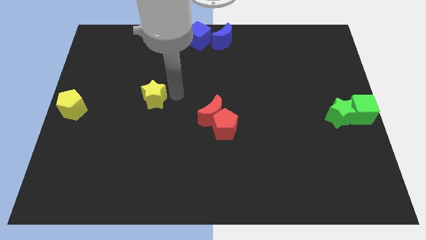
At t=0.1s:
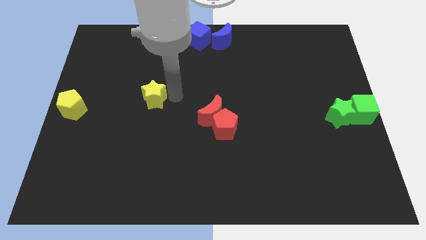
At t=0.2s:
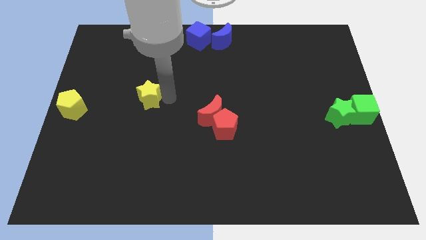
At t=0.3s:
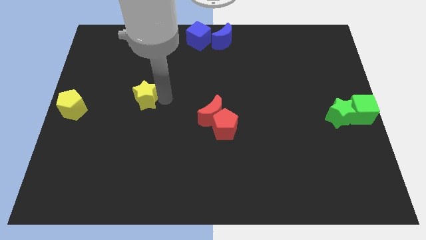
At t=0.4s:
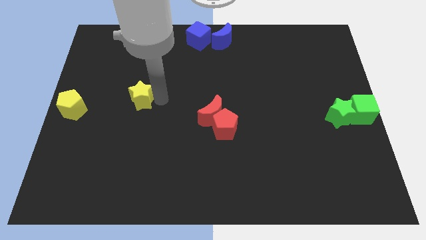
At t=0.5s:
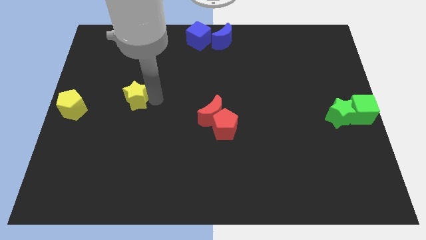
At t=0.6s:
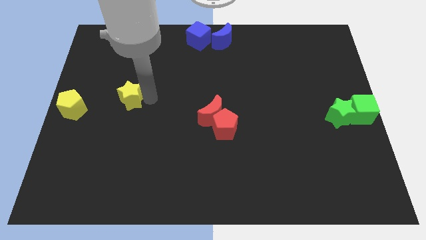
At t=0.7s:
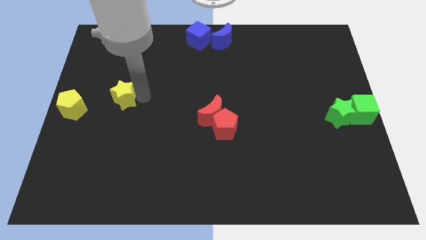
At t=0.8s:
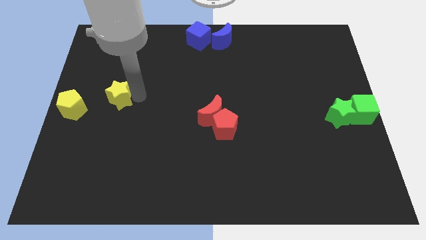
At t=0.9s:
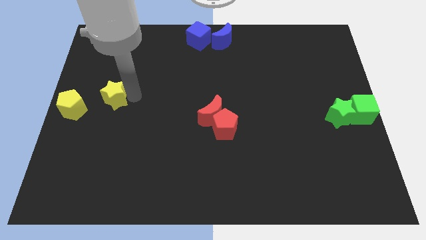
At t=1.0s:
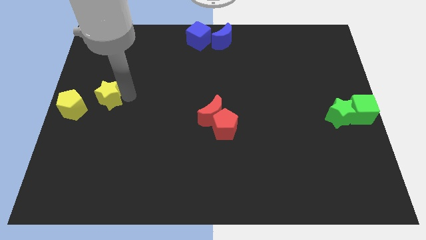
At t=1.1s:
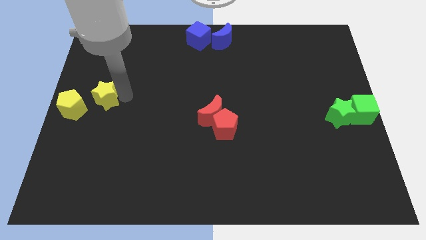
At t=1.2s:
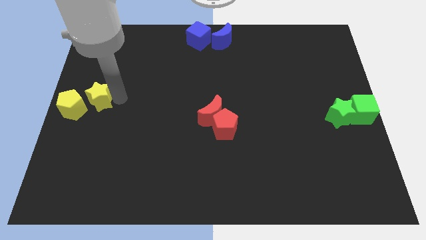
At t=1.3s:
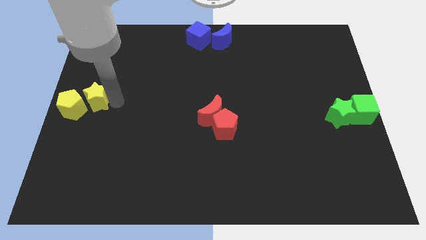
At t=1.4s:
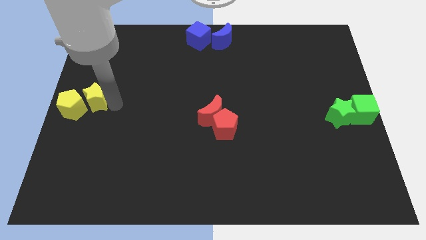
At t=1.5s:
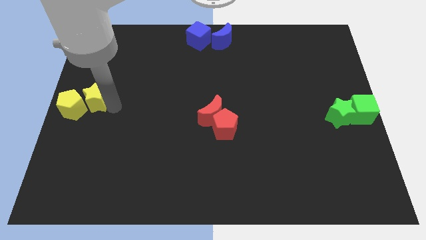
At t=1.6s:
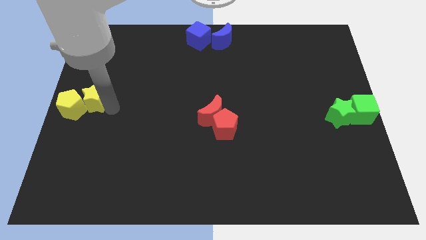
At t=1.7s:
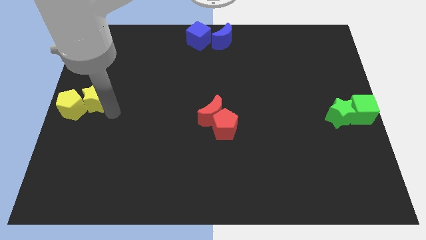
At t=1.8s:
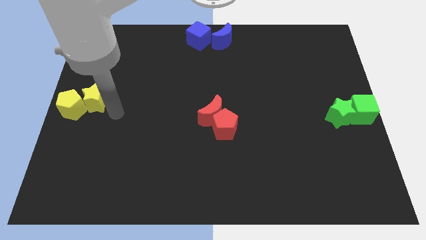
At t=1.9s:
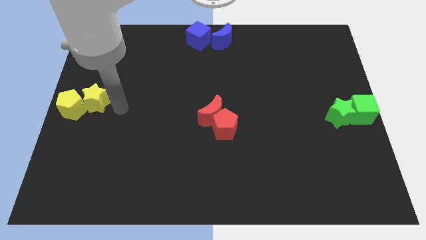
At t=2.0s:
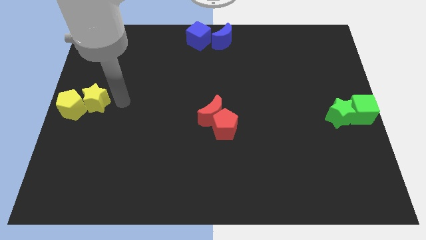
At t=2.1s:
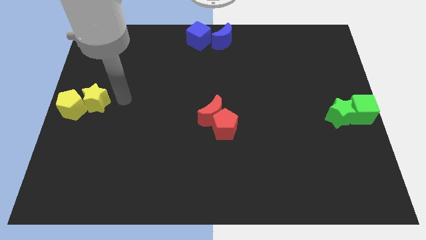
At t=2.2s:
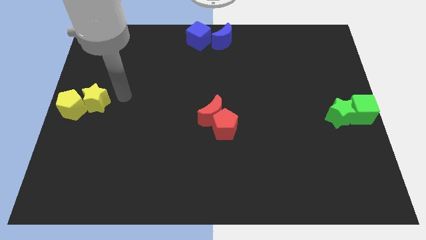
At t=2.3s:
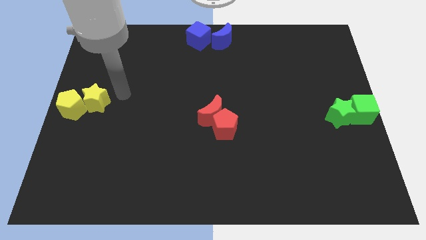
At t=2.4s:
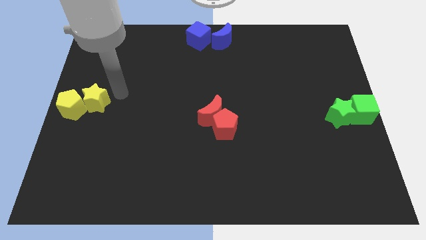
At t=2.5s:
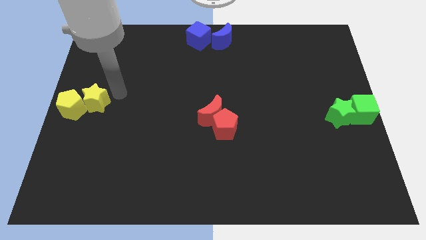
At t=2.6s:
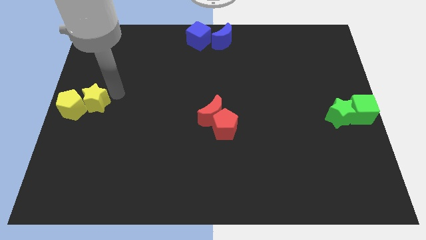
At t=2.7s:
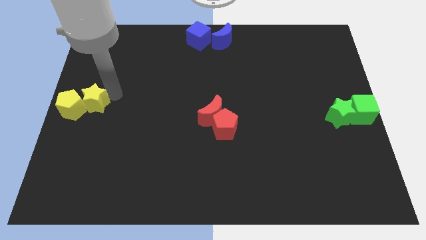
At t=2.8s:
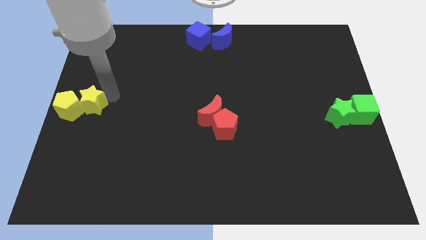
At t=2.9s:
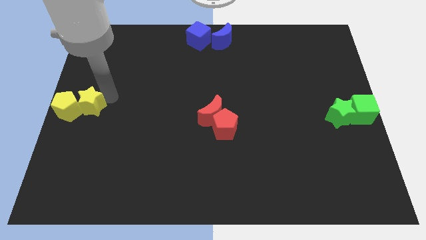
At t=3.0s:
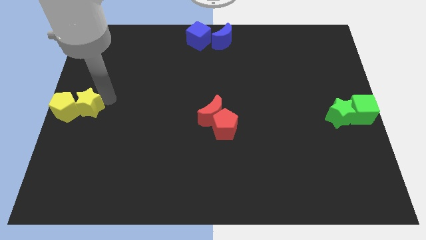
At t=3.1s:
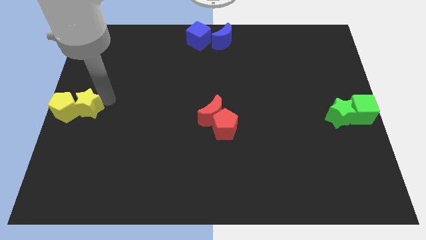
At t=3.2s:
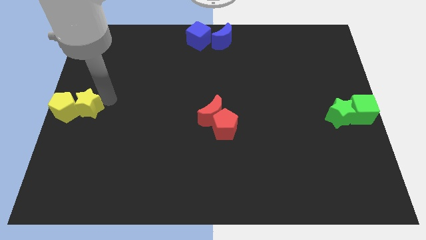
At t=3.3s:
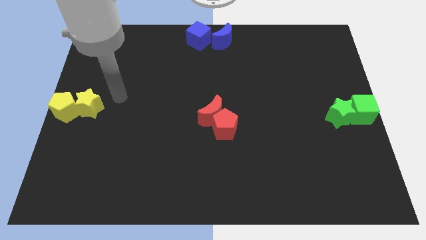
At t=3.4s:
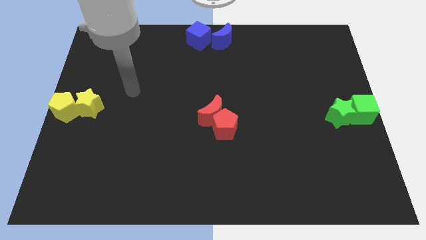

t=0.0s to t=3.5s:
push the yellow star into the yellow pentagon

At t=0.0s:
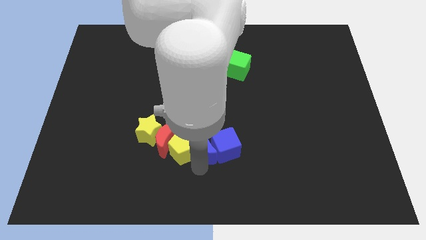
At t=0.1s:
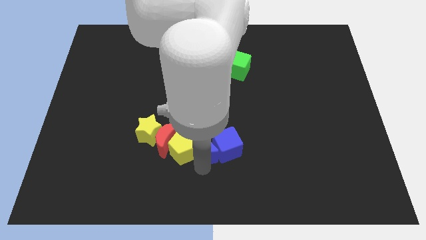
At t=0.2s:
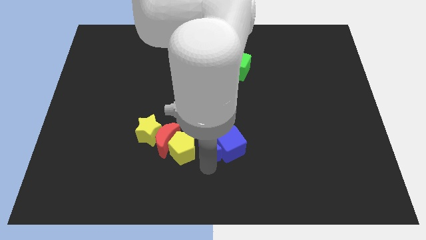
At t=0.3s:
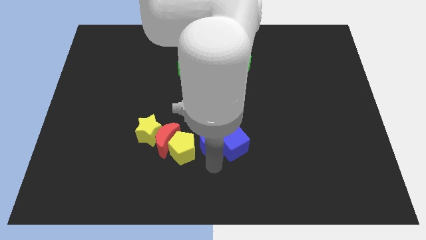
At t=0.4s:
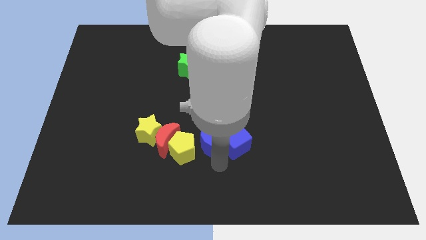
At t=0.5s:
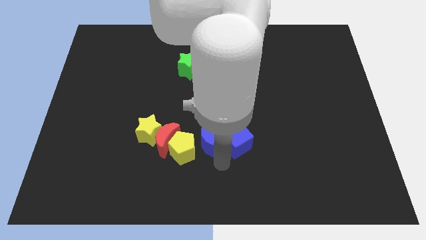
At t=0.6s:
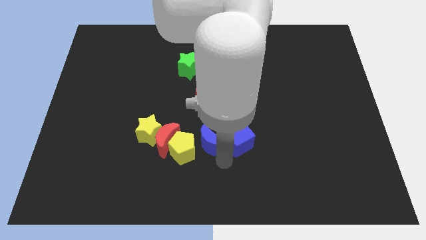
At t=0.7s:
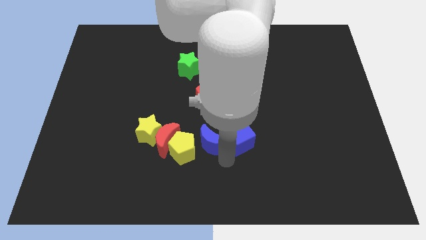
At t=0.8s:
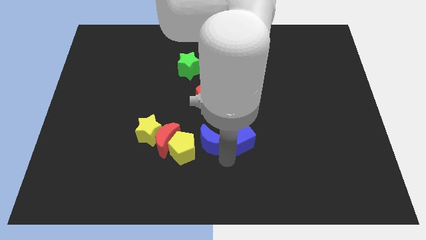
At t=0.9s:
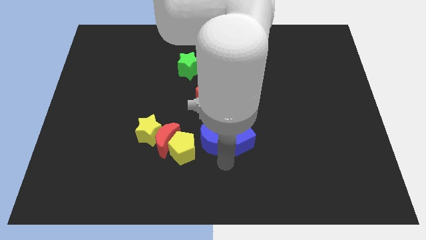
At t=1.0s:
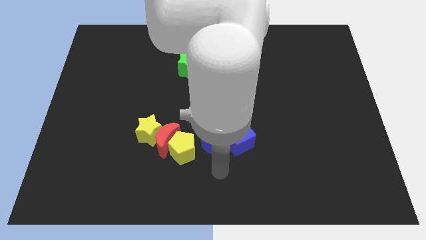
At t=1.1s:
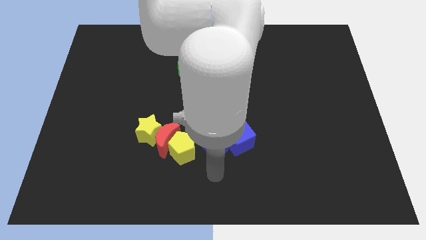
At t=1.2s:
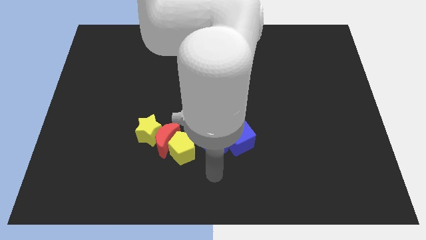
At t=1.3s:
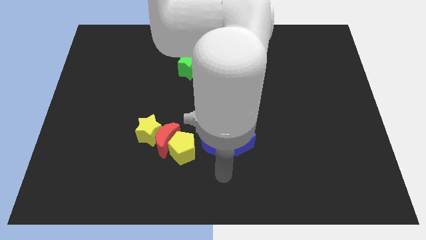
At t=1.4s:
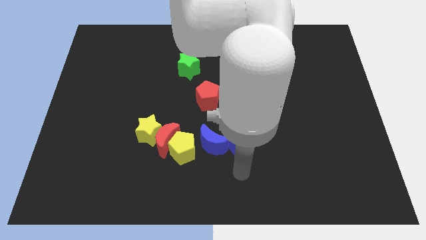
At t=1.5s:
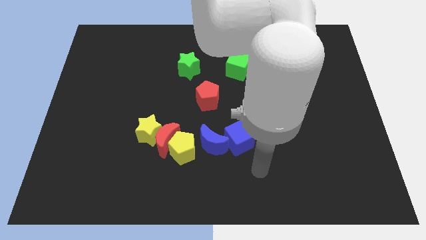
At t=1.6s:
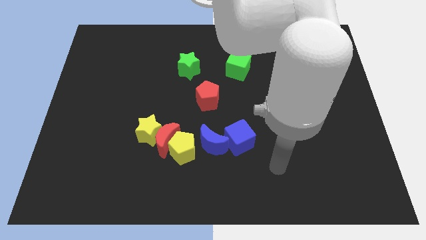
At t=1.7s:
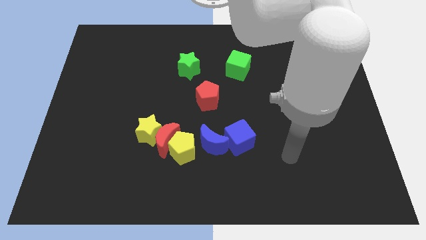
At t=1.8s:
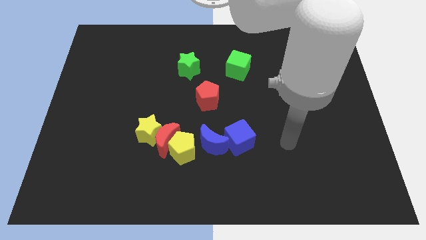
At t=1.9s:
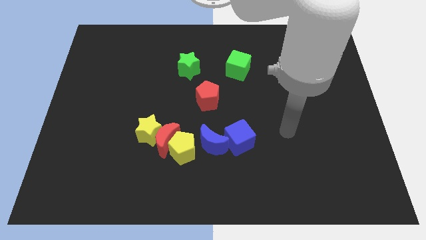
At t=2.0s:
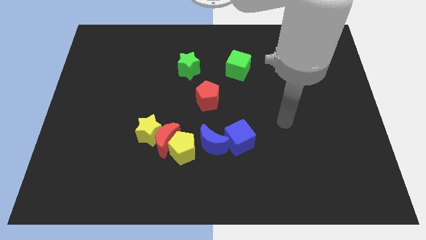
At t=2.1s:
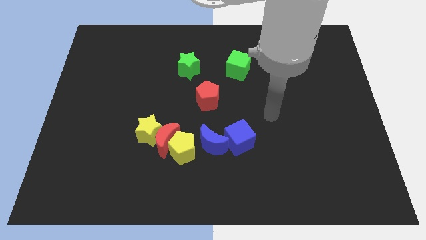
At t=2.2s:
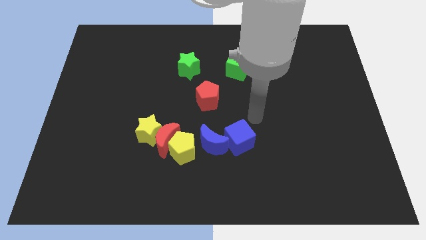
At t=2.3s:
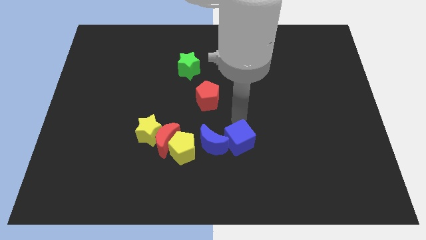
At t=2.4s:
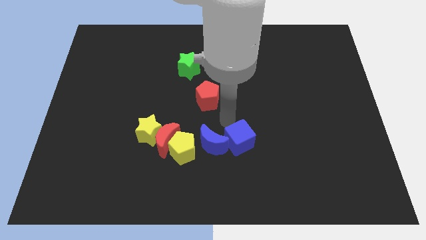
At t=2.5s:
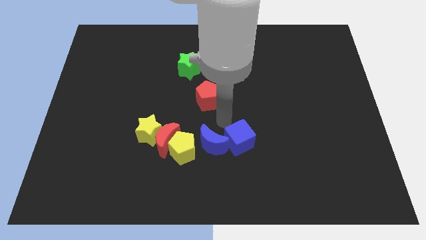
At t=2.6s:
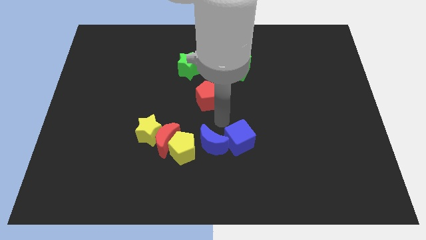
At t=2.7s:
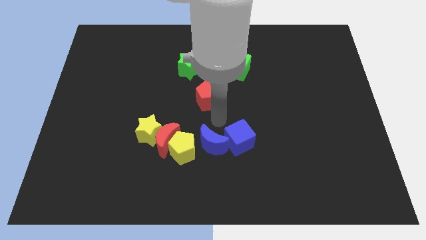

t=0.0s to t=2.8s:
separate the blue crescent and blue cube from yellow pentagon

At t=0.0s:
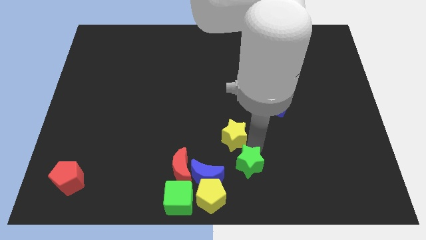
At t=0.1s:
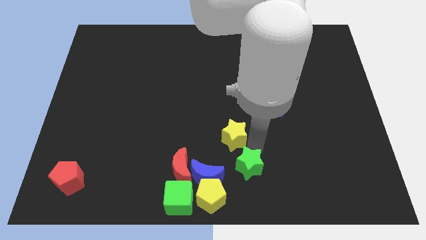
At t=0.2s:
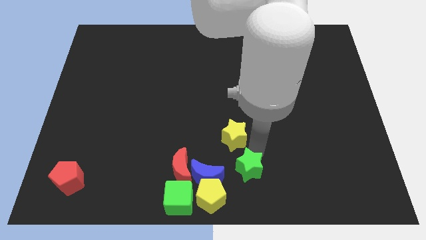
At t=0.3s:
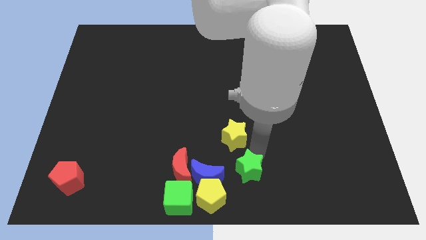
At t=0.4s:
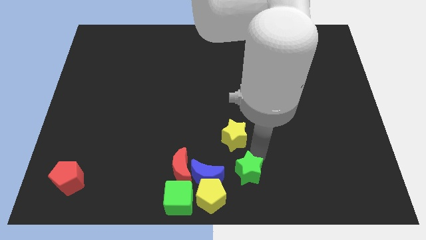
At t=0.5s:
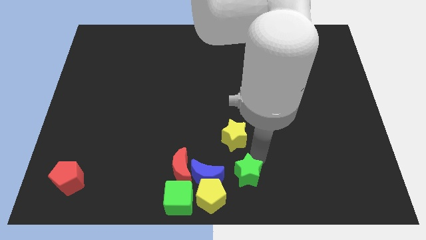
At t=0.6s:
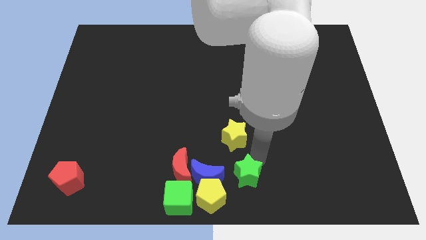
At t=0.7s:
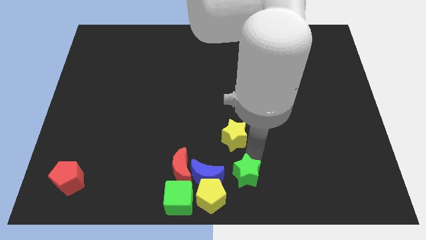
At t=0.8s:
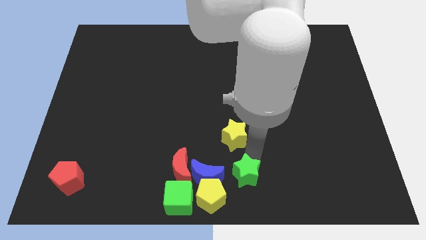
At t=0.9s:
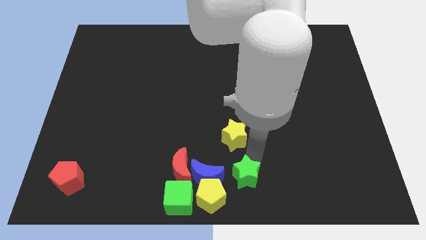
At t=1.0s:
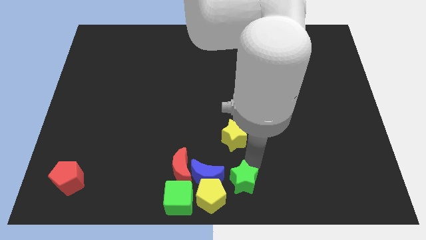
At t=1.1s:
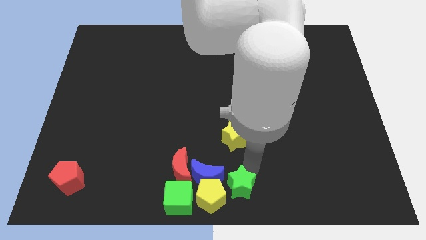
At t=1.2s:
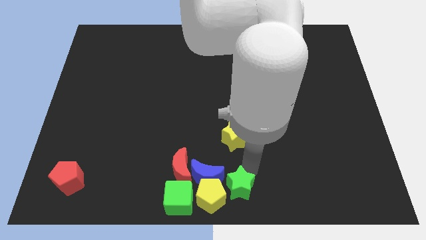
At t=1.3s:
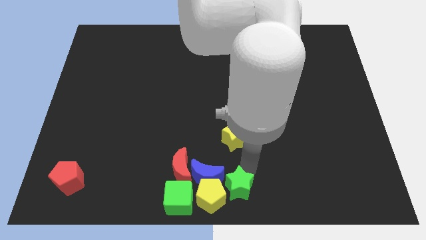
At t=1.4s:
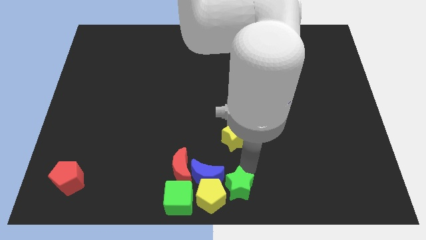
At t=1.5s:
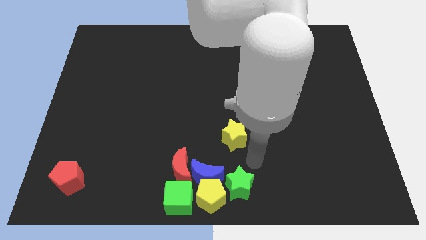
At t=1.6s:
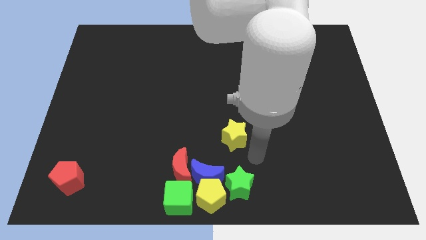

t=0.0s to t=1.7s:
place green star beside yellow pentagon

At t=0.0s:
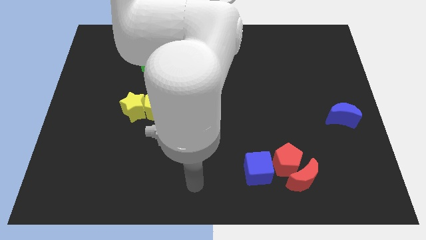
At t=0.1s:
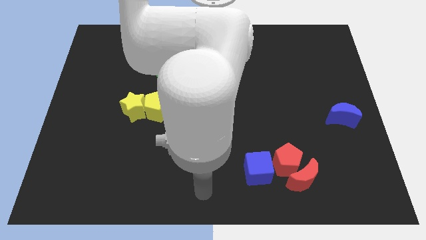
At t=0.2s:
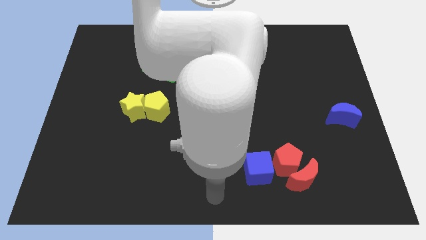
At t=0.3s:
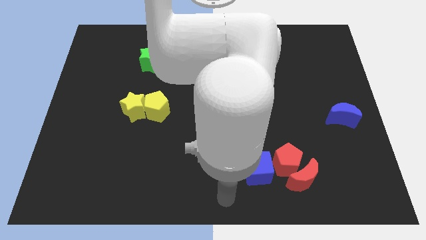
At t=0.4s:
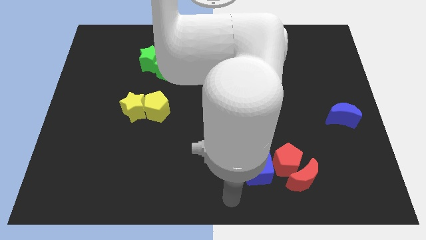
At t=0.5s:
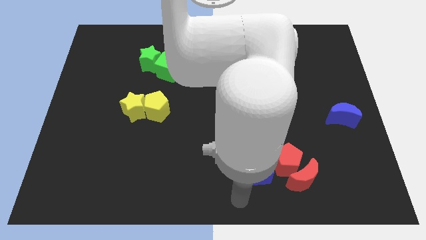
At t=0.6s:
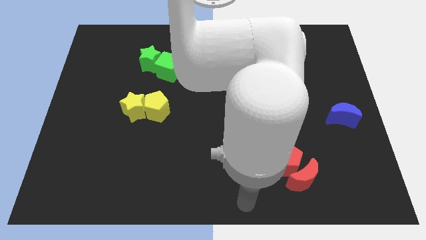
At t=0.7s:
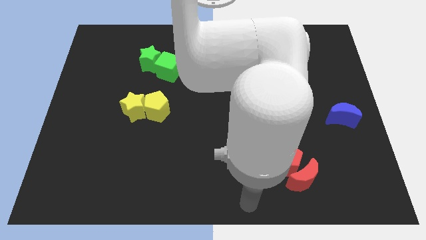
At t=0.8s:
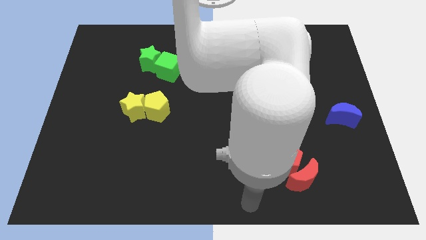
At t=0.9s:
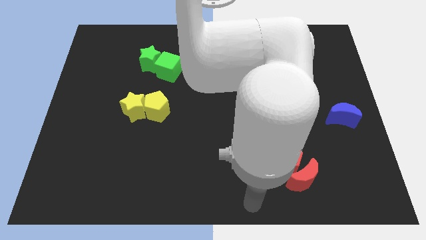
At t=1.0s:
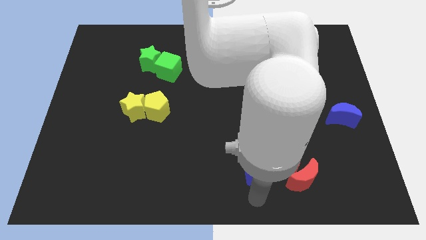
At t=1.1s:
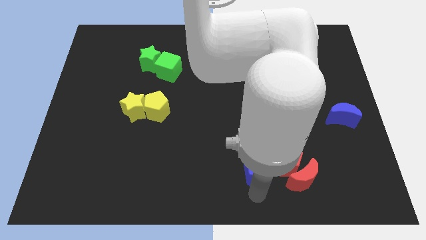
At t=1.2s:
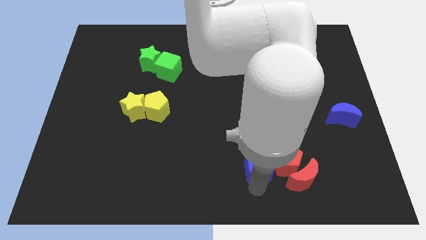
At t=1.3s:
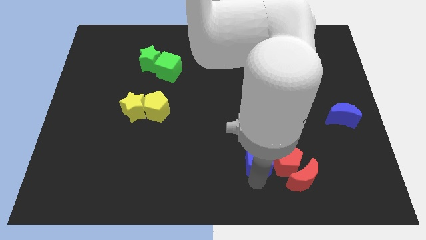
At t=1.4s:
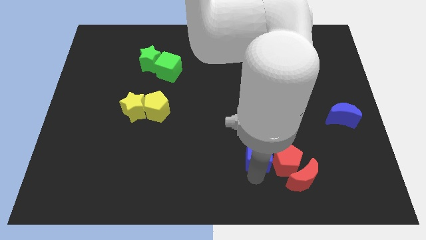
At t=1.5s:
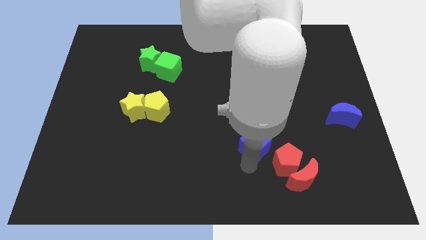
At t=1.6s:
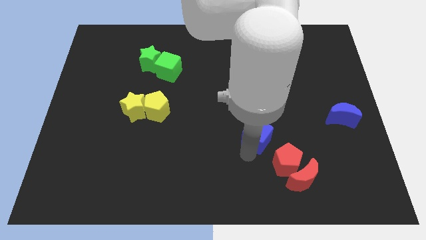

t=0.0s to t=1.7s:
drag the blue cube diagonally to green cube
